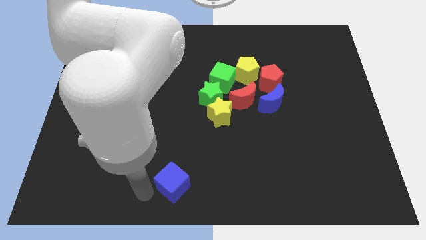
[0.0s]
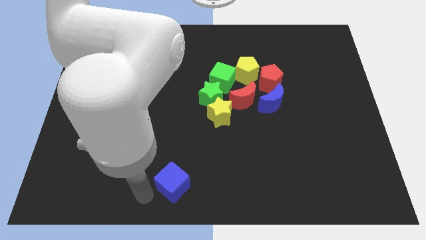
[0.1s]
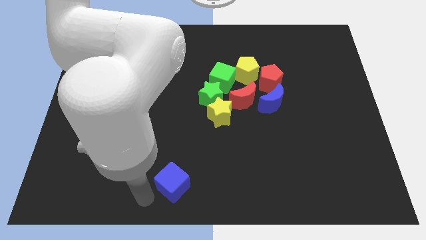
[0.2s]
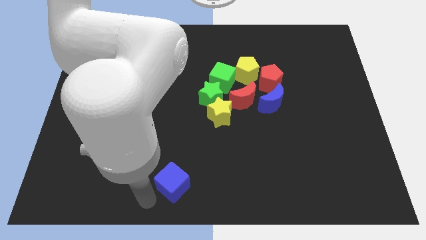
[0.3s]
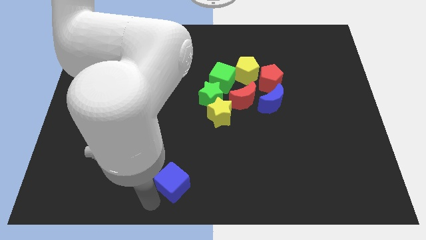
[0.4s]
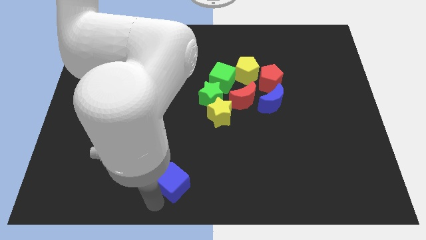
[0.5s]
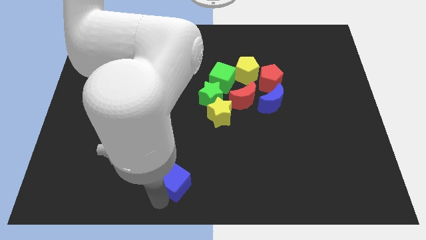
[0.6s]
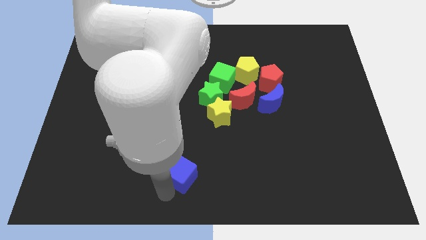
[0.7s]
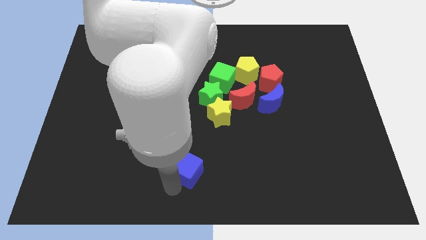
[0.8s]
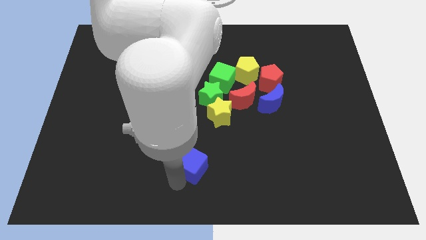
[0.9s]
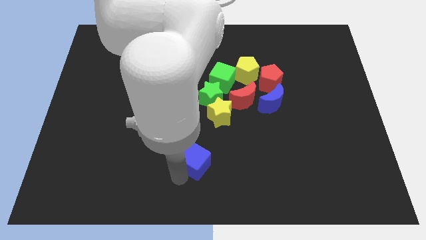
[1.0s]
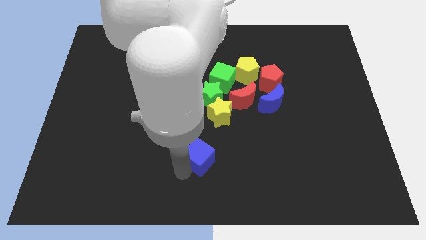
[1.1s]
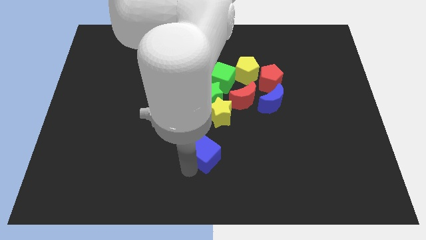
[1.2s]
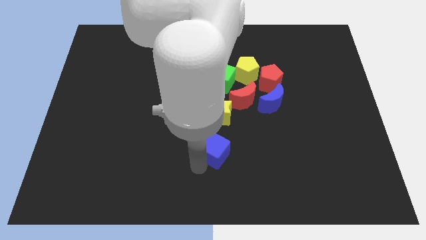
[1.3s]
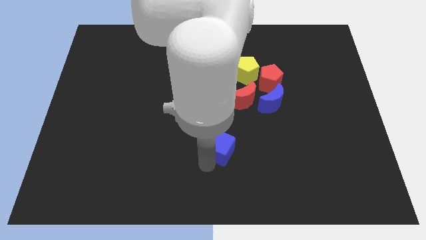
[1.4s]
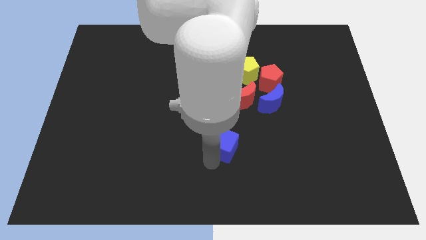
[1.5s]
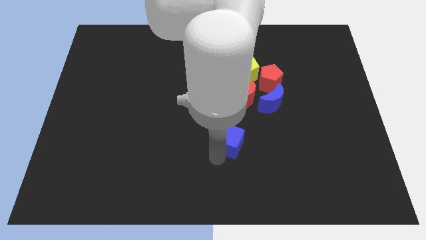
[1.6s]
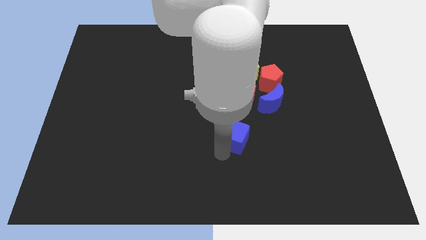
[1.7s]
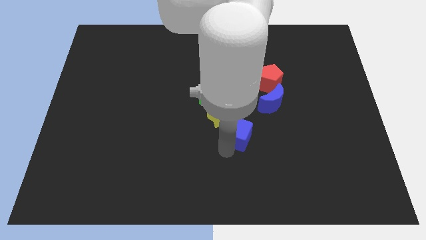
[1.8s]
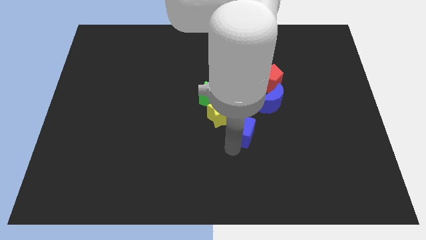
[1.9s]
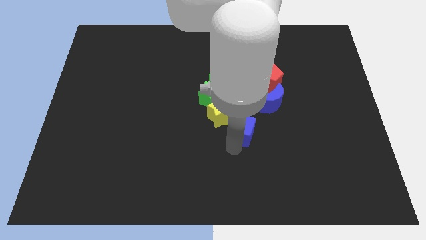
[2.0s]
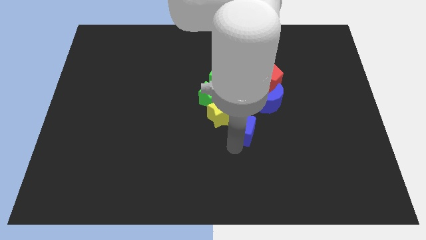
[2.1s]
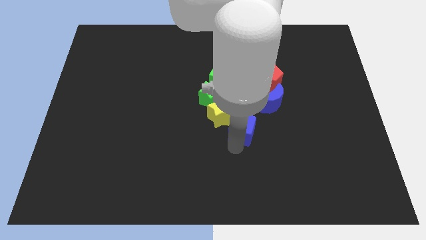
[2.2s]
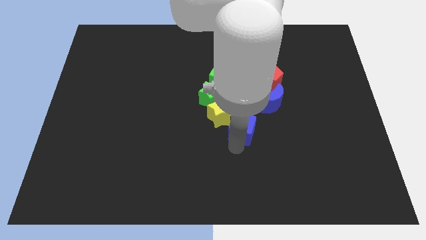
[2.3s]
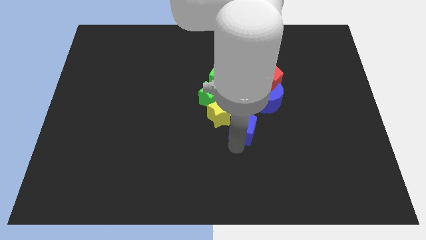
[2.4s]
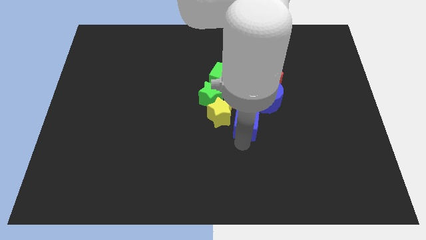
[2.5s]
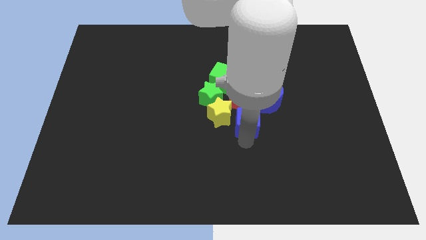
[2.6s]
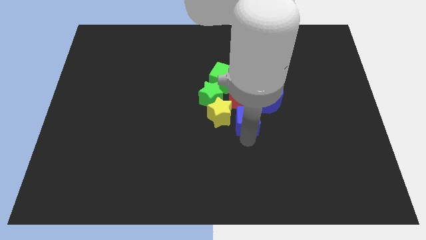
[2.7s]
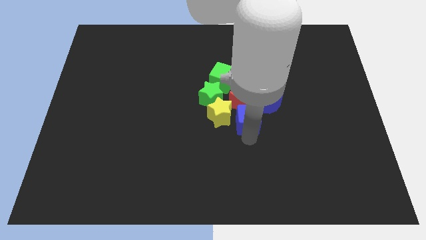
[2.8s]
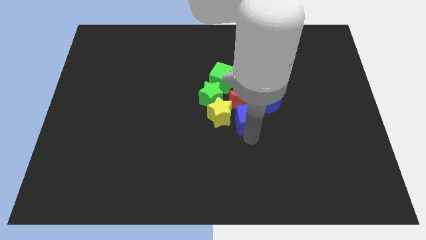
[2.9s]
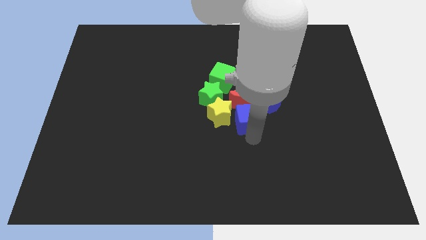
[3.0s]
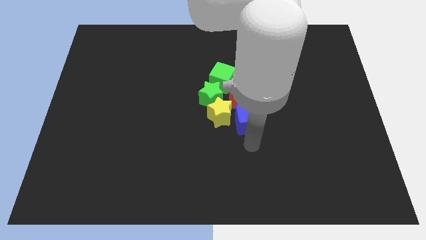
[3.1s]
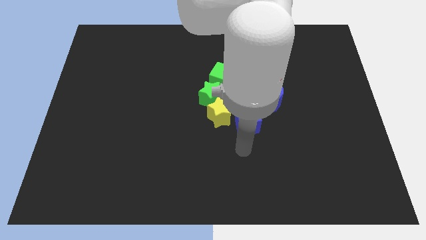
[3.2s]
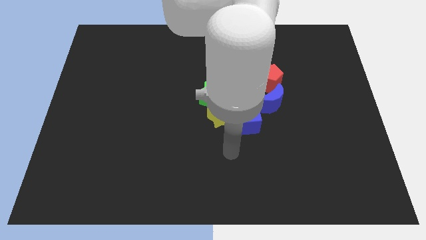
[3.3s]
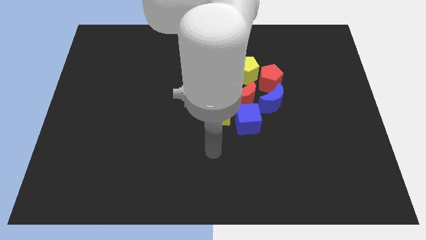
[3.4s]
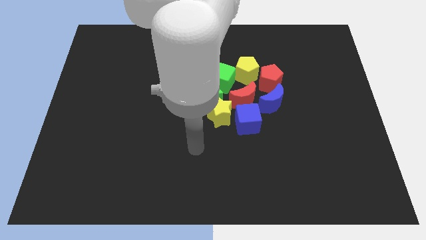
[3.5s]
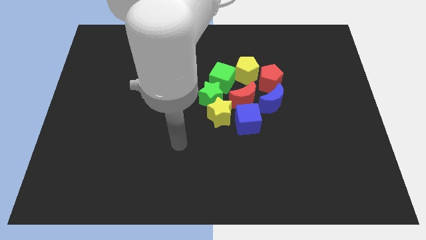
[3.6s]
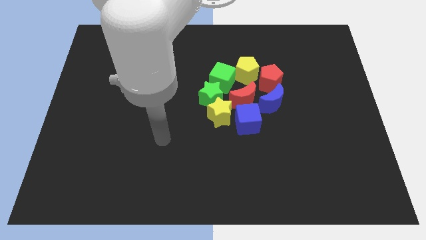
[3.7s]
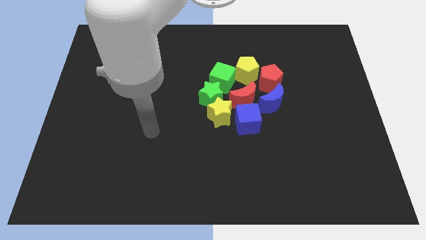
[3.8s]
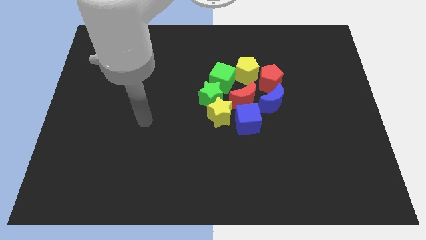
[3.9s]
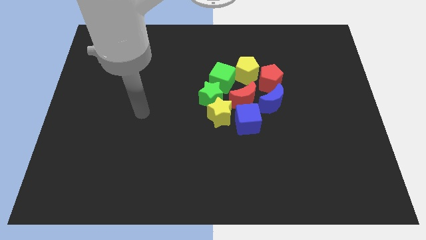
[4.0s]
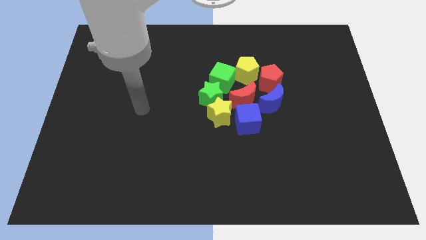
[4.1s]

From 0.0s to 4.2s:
place the blue cube into the group of blocks

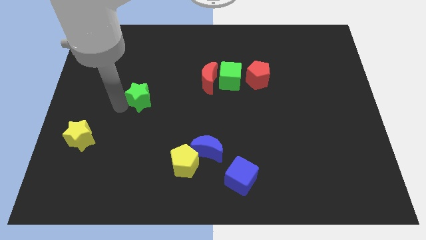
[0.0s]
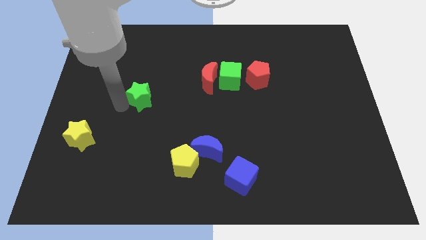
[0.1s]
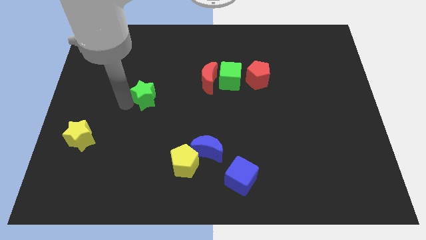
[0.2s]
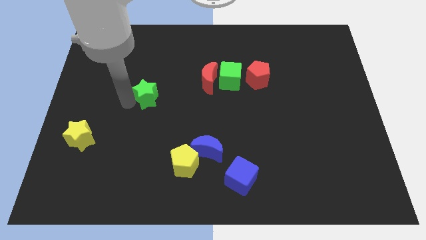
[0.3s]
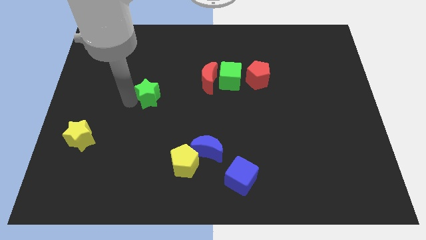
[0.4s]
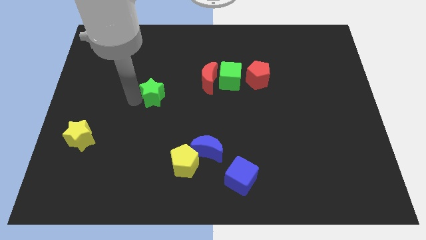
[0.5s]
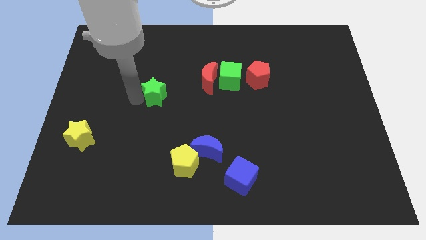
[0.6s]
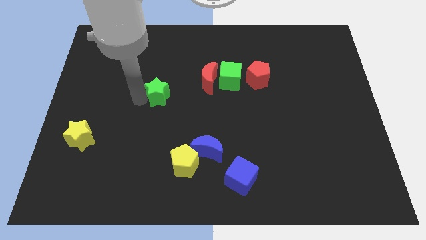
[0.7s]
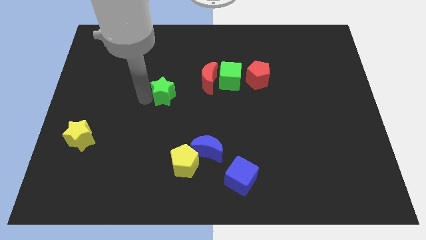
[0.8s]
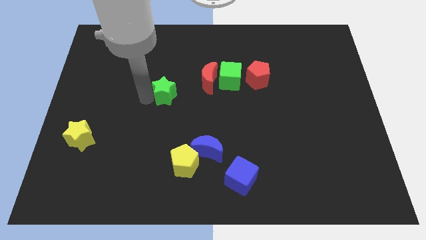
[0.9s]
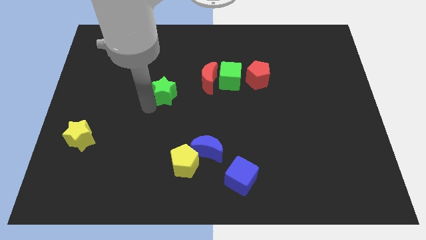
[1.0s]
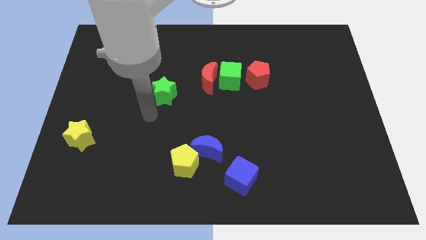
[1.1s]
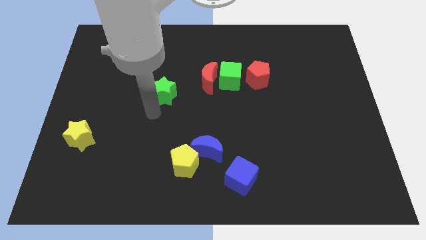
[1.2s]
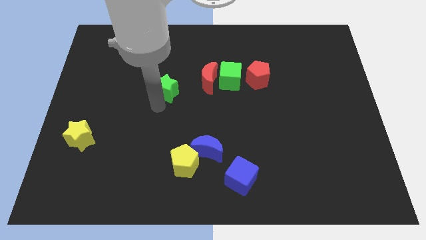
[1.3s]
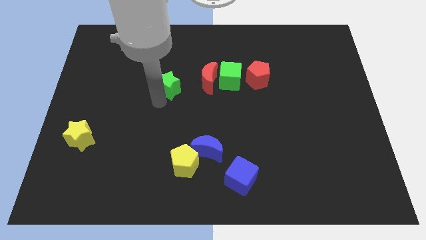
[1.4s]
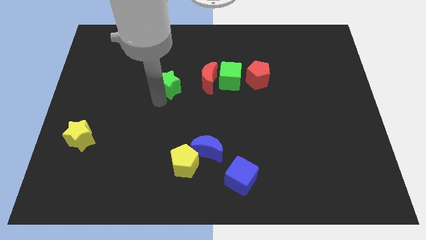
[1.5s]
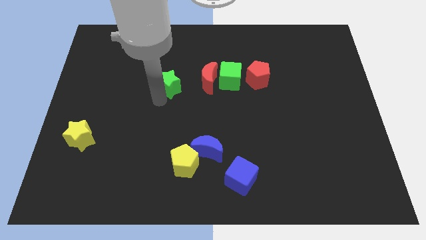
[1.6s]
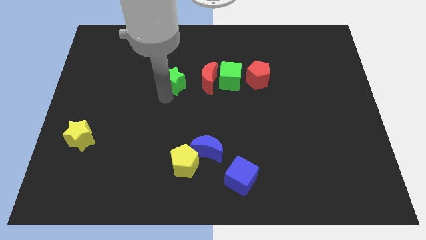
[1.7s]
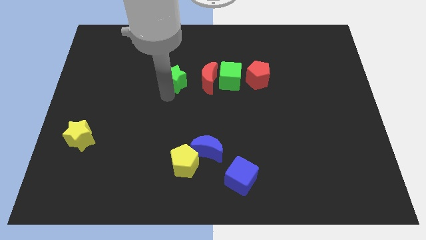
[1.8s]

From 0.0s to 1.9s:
drag the green star towards the red crescent

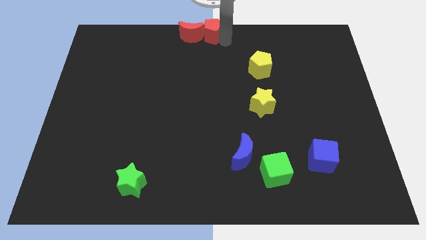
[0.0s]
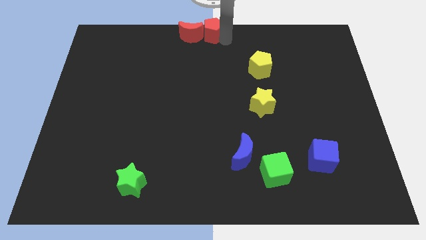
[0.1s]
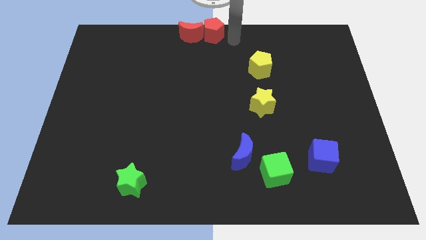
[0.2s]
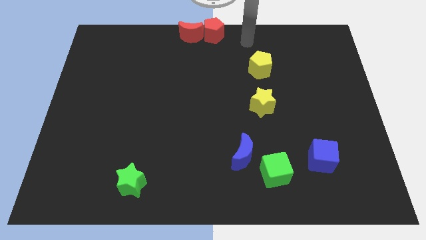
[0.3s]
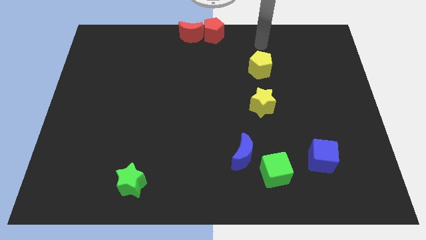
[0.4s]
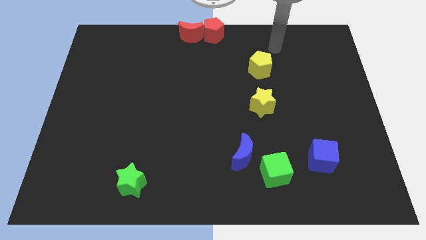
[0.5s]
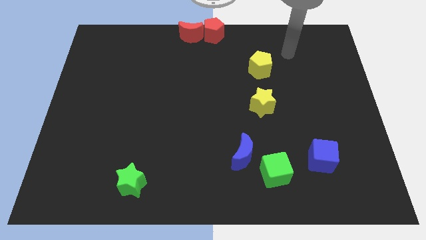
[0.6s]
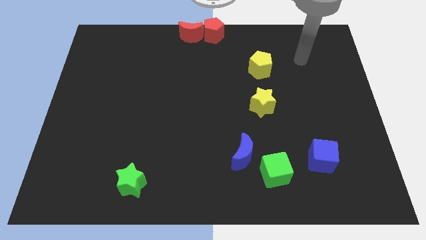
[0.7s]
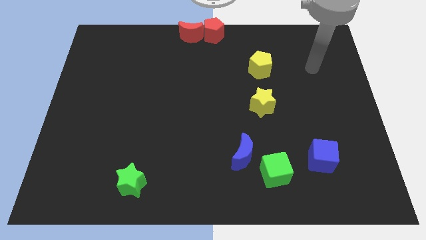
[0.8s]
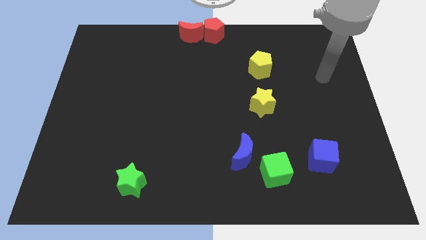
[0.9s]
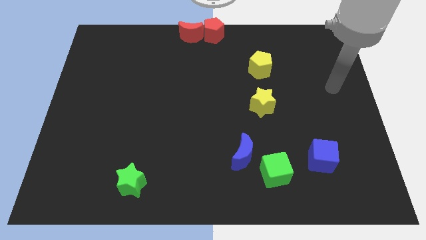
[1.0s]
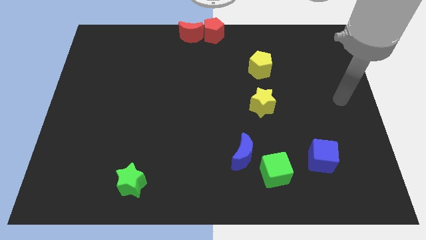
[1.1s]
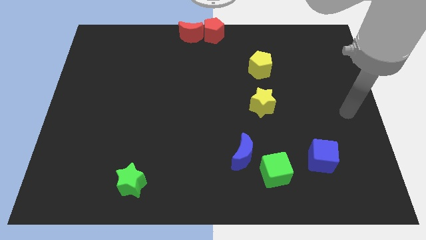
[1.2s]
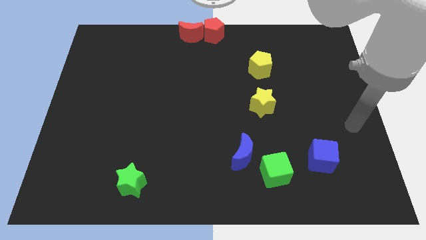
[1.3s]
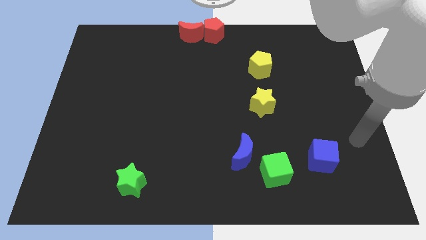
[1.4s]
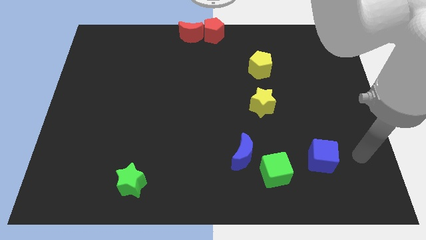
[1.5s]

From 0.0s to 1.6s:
move your arm to the right of the blue cube

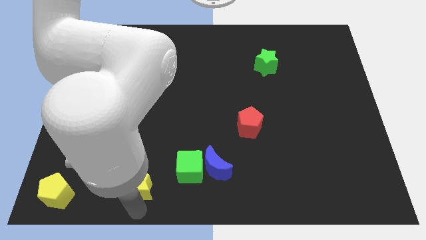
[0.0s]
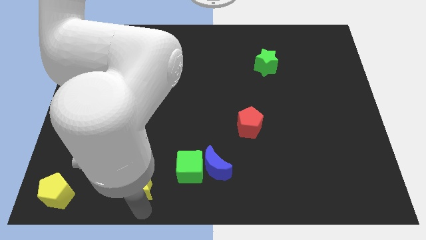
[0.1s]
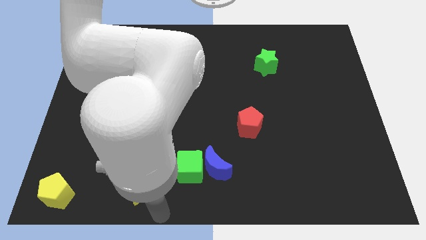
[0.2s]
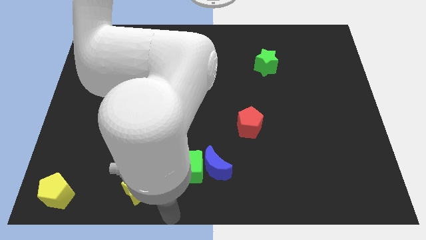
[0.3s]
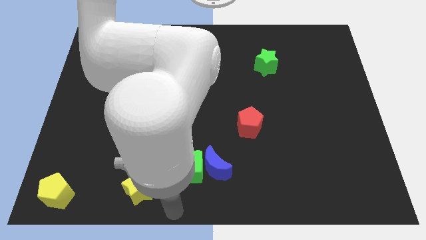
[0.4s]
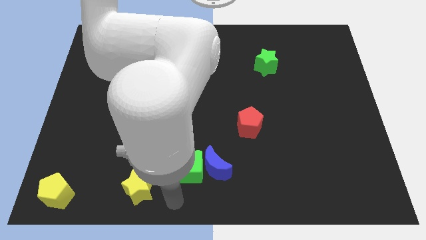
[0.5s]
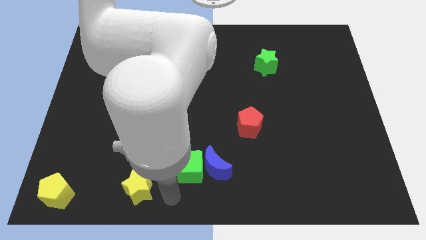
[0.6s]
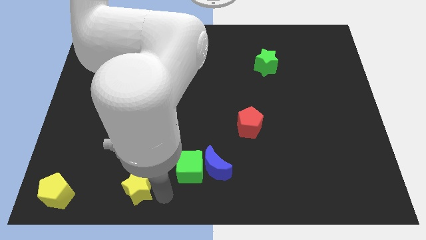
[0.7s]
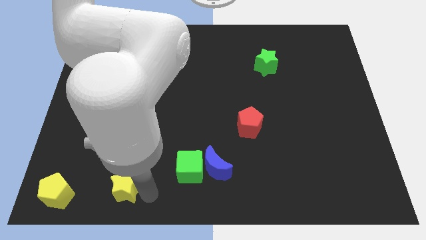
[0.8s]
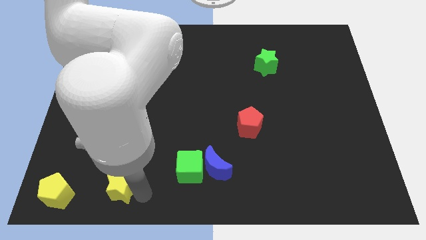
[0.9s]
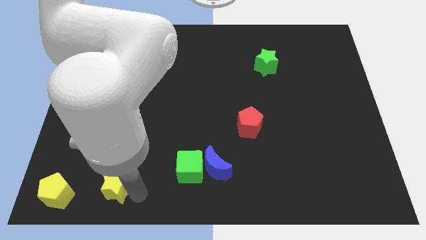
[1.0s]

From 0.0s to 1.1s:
move yellow star in between yellow pentagon and green cube

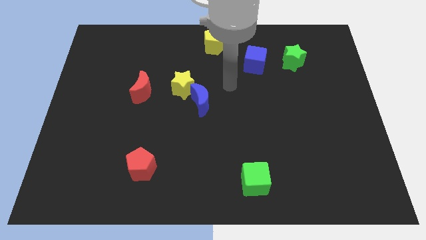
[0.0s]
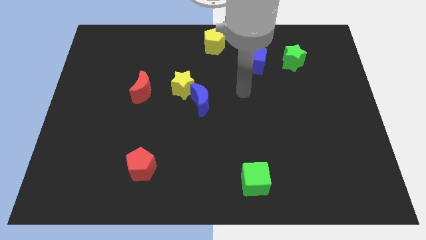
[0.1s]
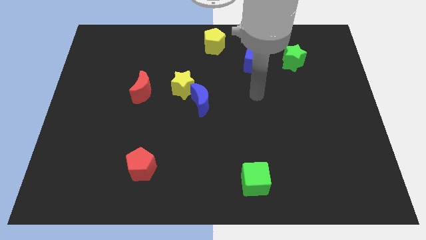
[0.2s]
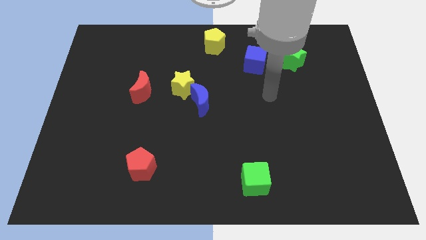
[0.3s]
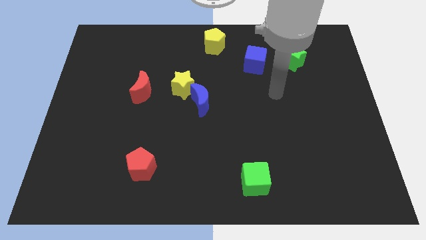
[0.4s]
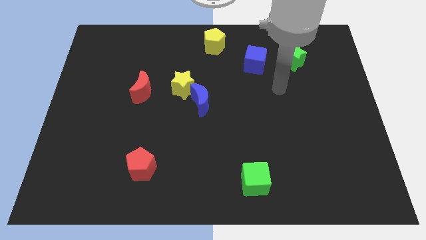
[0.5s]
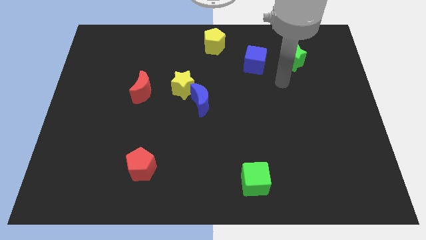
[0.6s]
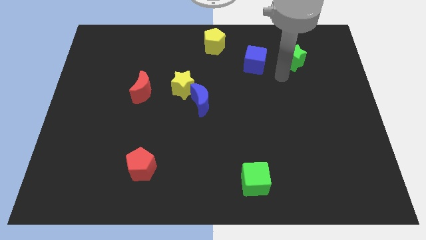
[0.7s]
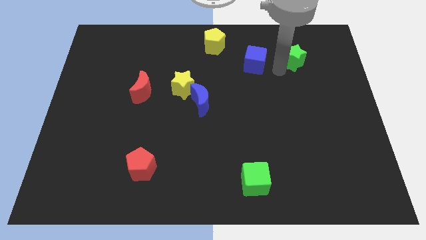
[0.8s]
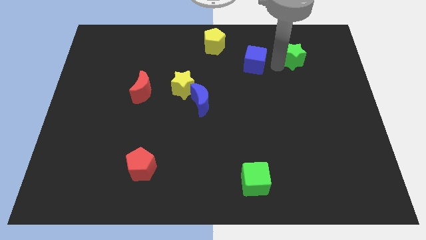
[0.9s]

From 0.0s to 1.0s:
point your arm between the blue cube and green star
